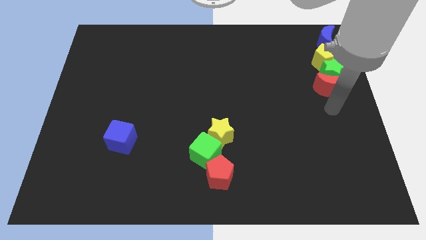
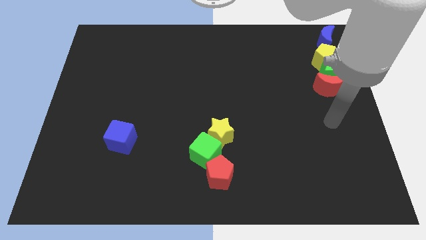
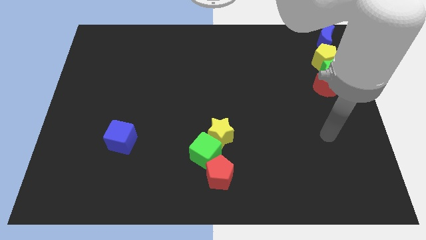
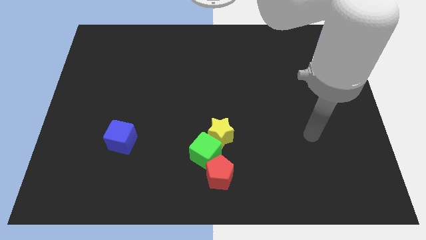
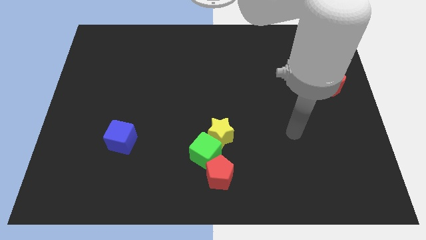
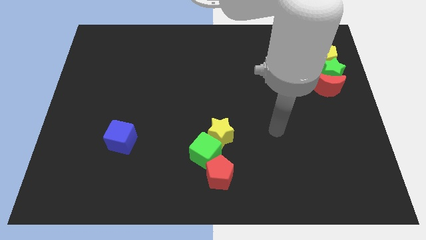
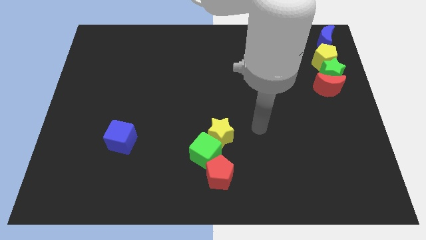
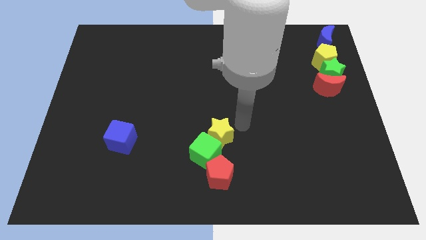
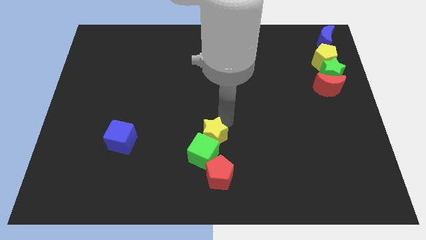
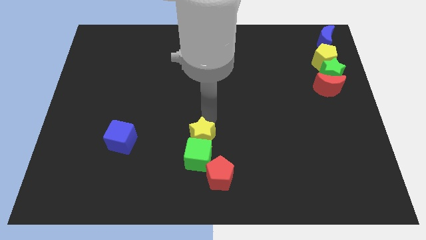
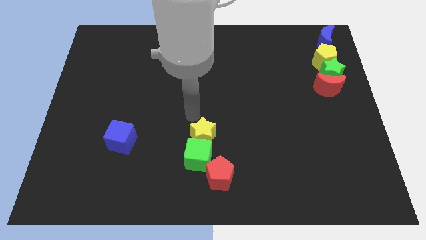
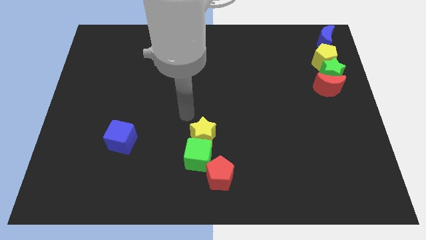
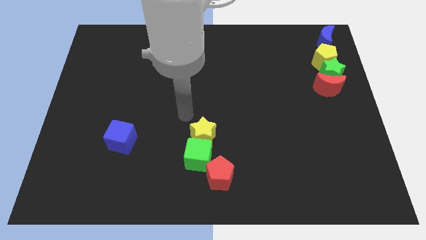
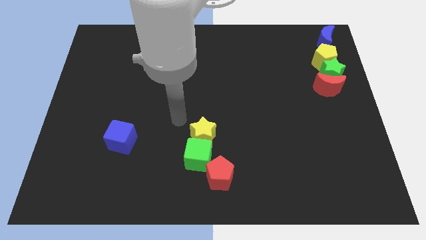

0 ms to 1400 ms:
go and touch the yellow star

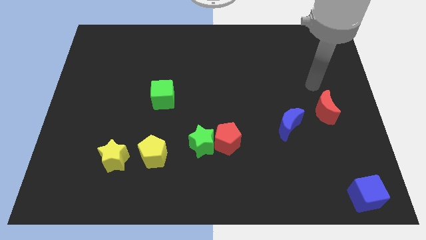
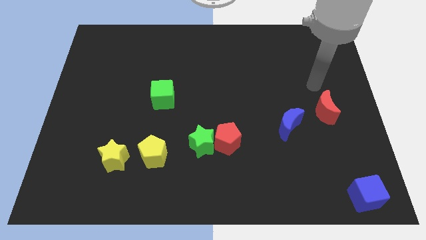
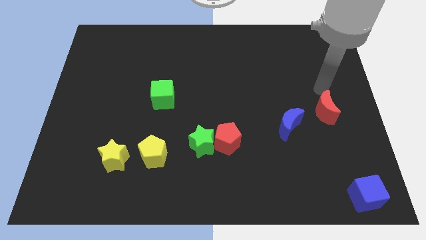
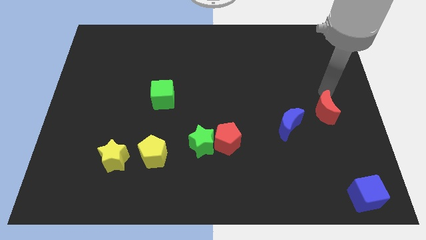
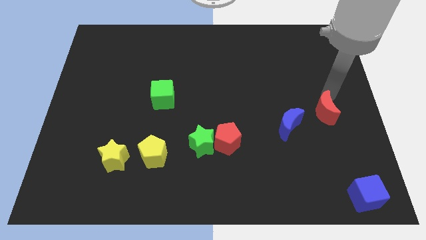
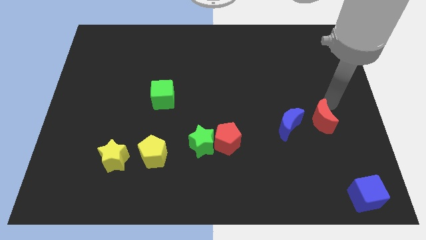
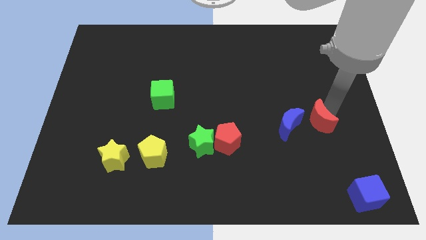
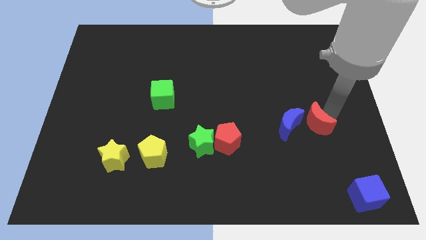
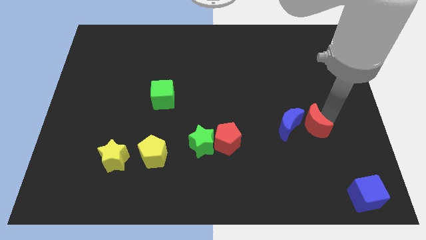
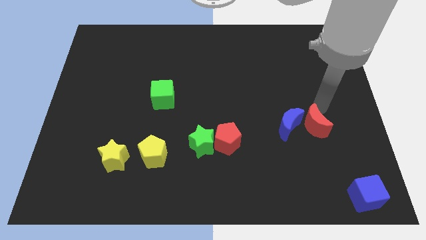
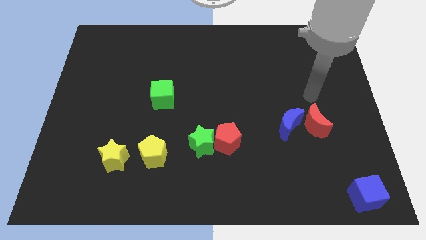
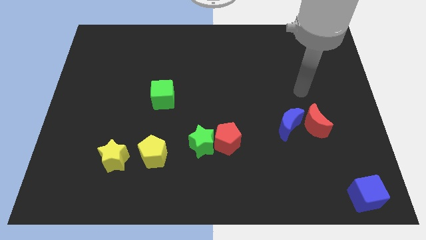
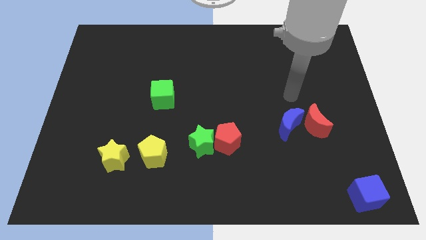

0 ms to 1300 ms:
move the red crescent to the right of the blue crescent

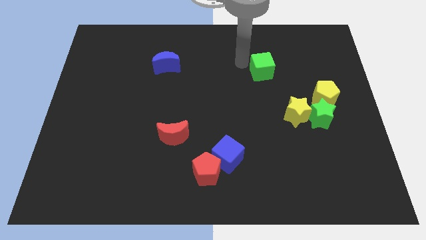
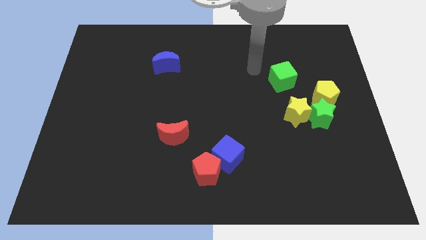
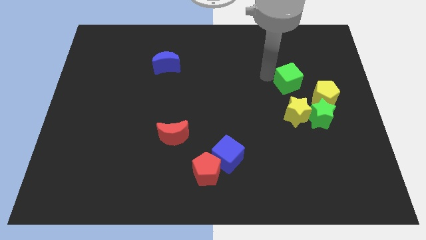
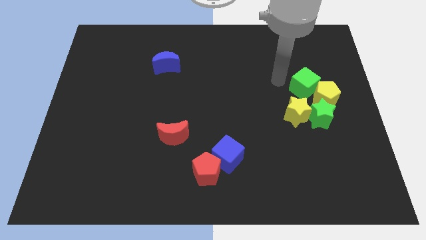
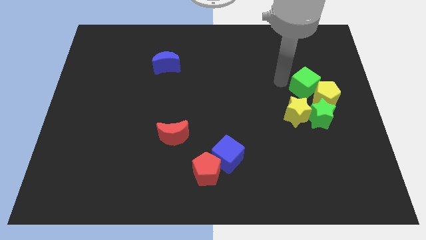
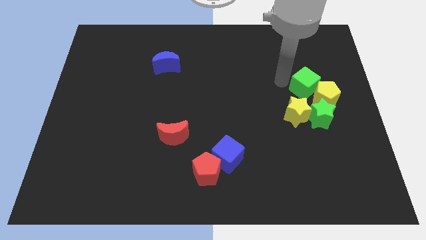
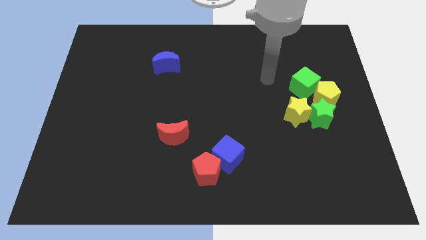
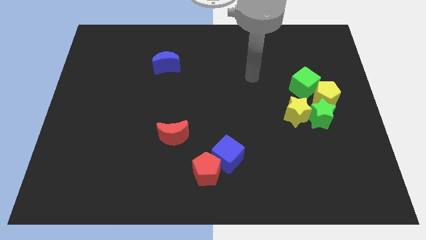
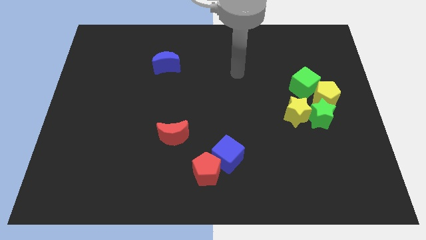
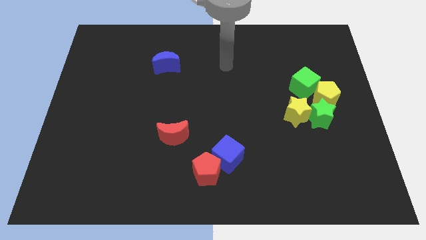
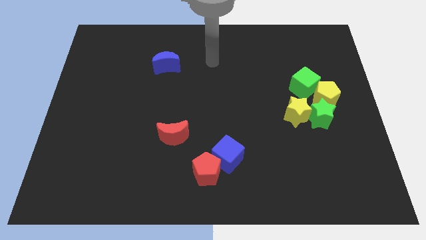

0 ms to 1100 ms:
push the green cube into the yellow pentagon

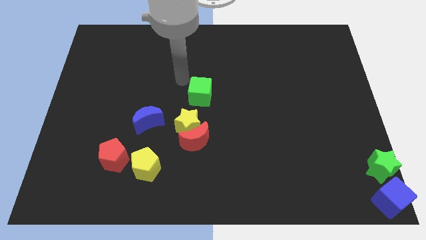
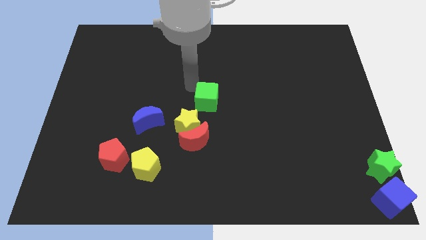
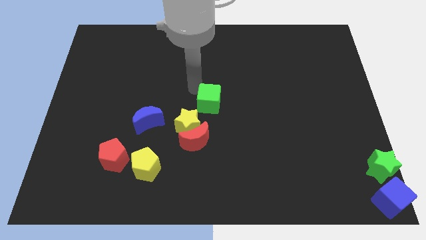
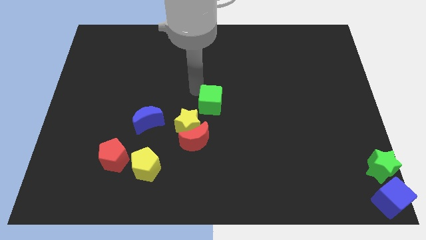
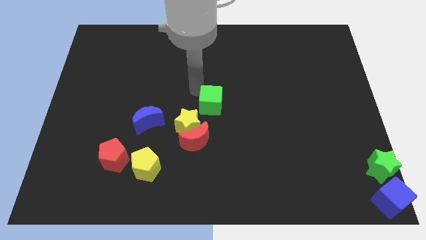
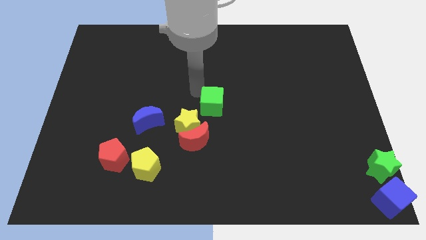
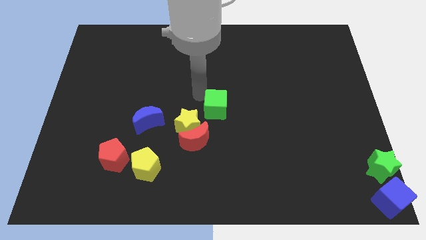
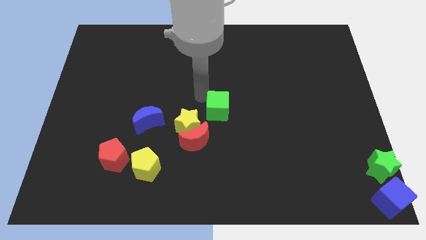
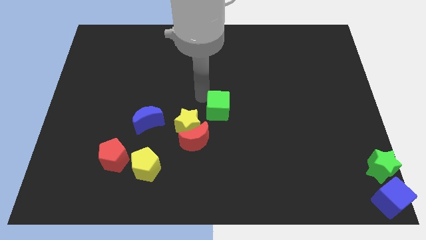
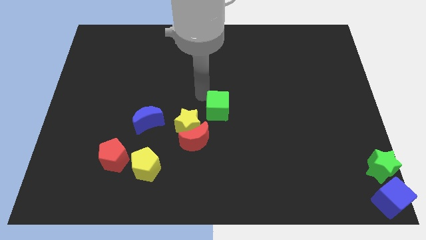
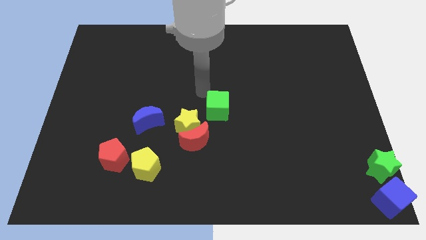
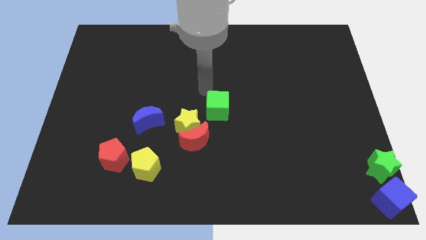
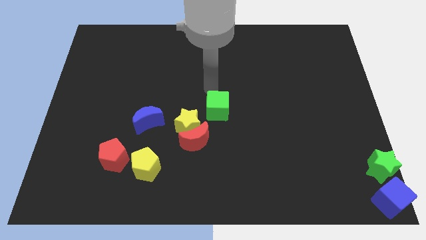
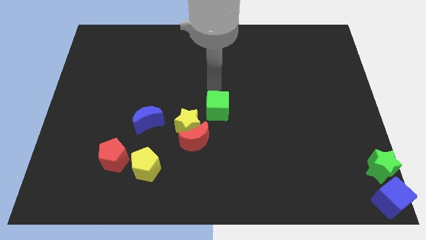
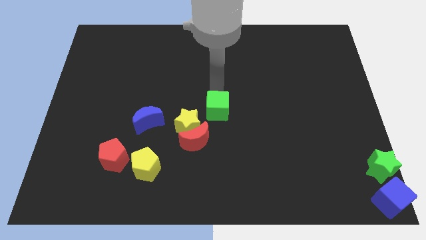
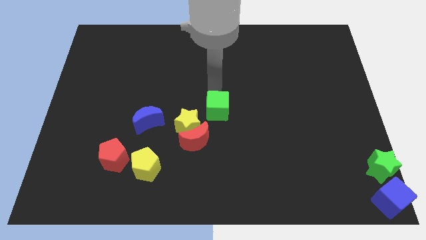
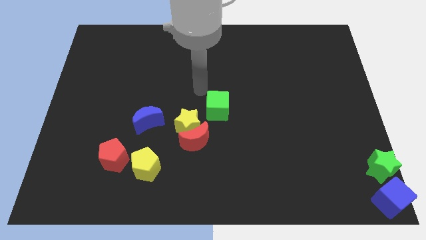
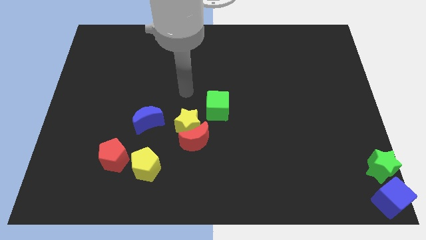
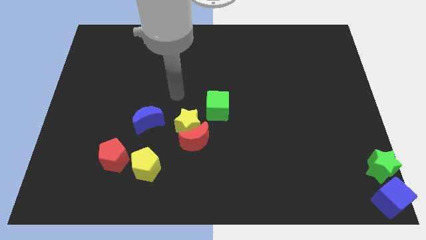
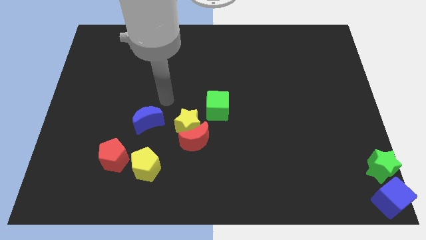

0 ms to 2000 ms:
push green cube towards the center of the board

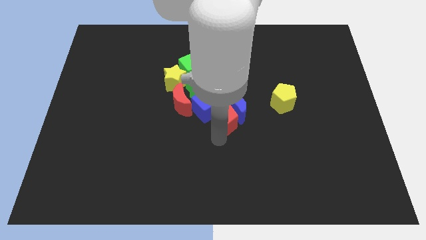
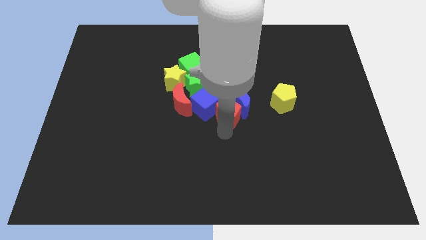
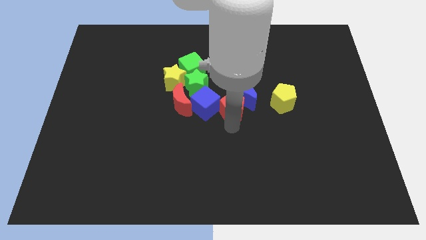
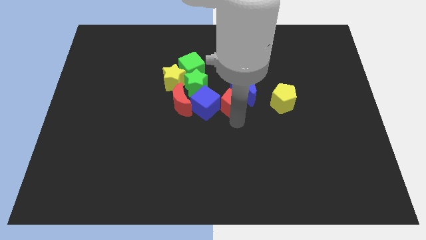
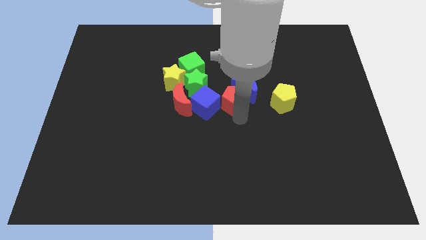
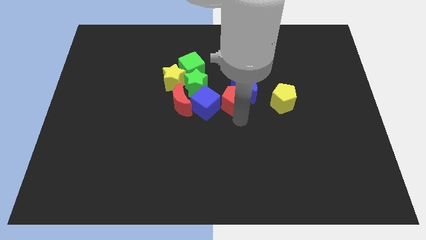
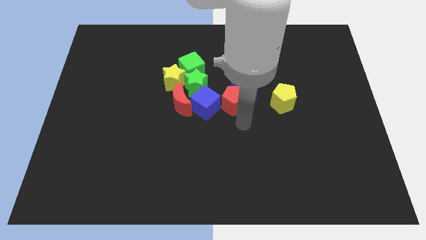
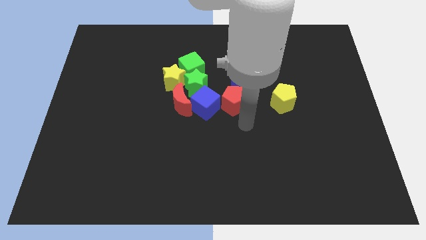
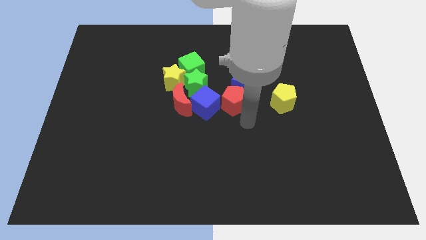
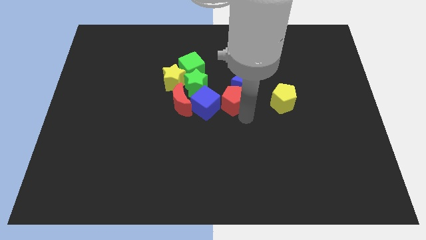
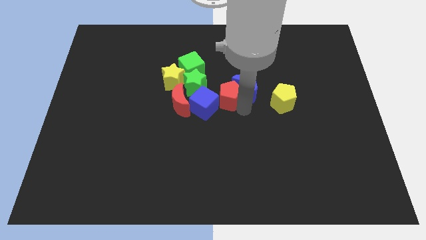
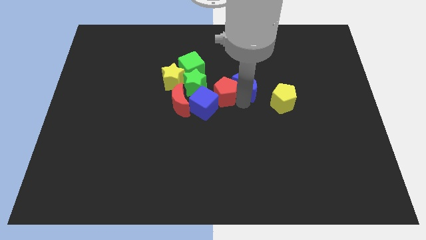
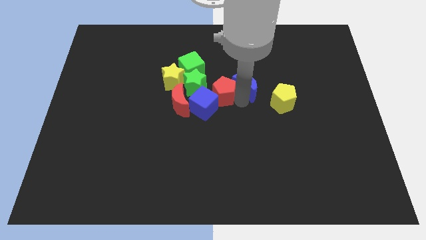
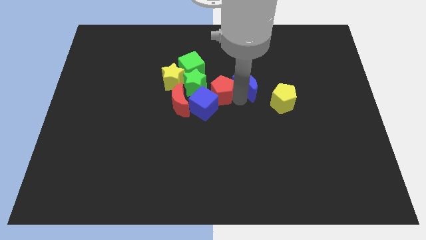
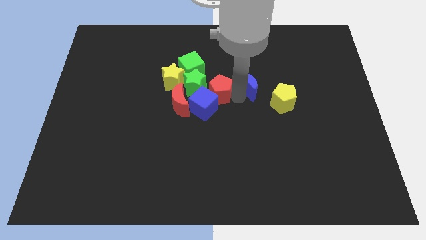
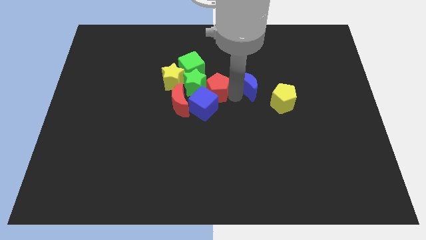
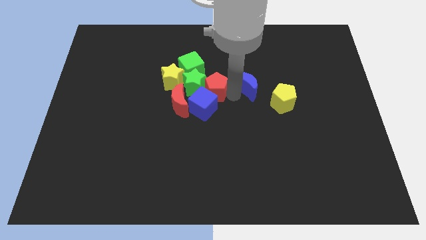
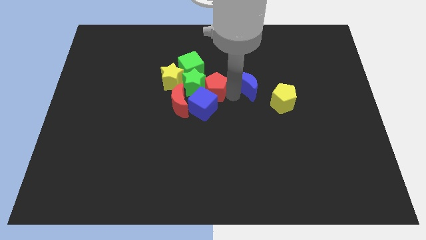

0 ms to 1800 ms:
move the red pentagon closer to the right of the green star

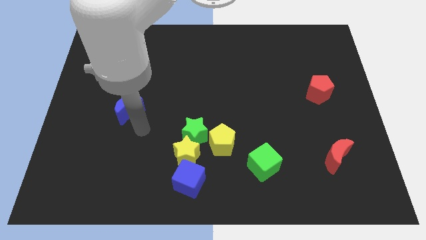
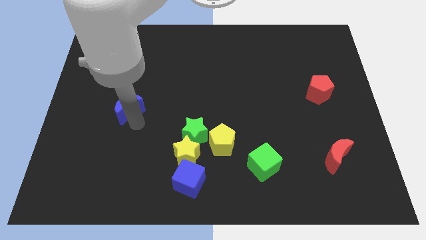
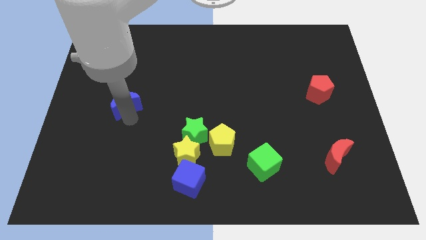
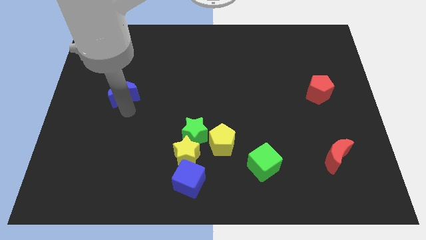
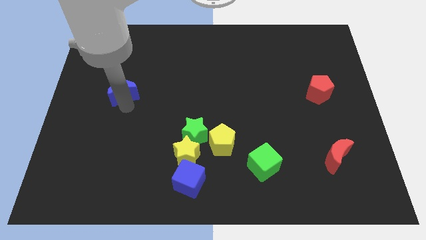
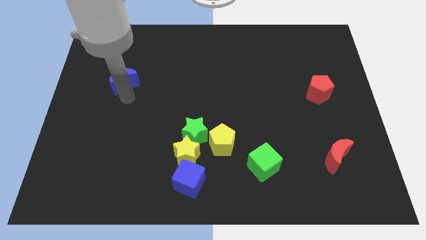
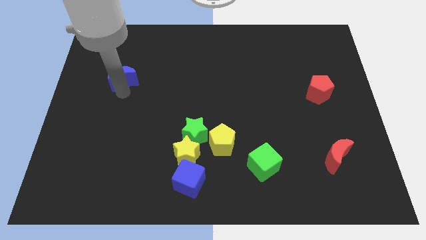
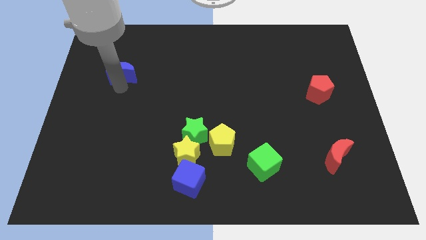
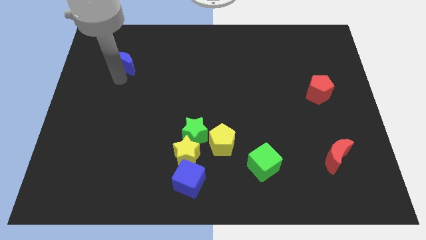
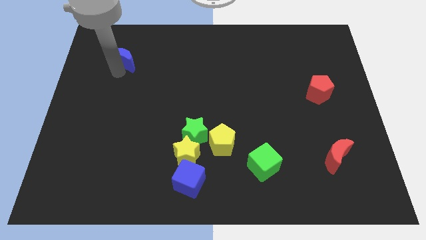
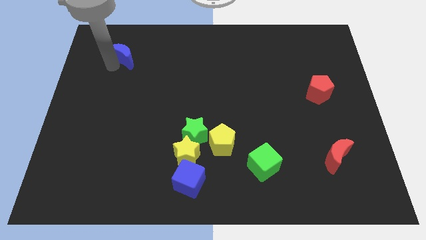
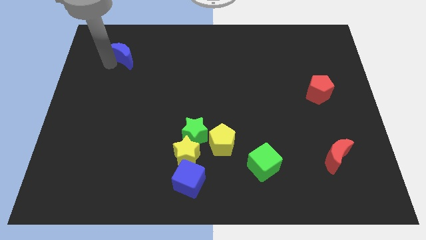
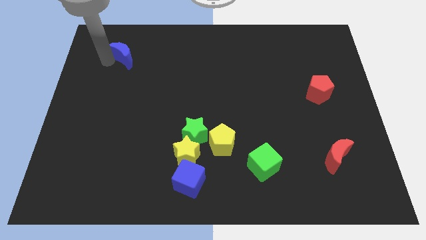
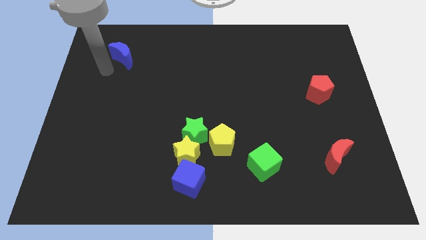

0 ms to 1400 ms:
move the blue crescent slightly towards top left of board
